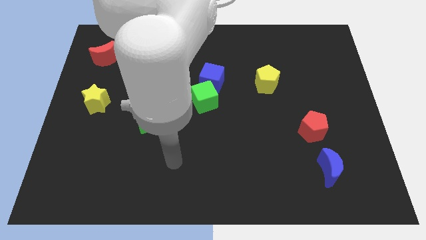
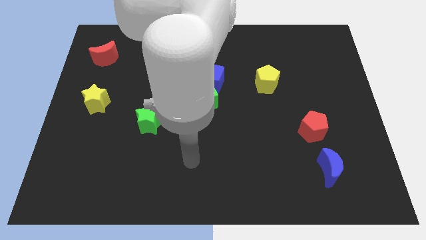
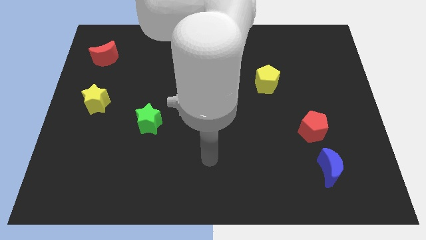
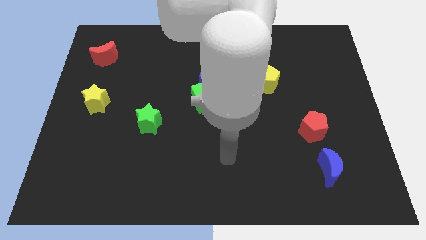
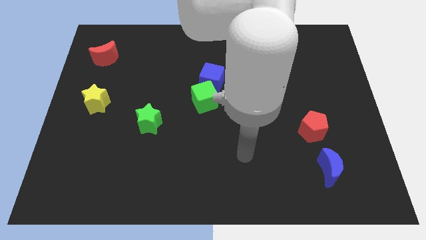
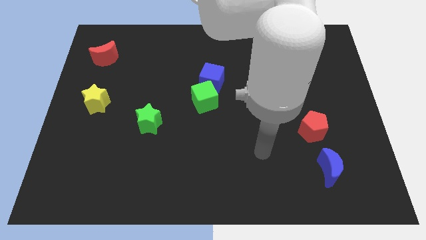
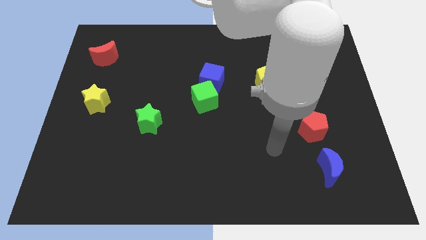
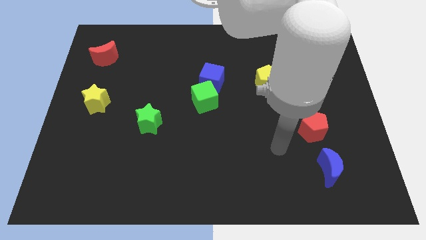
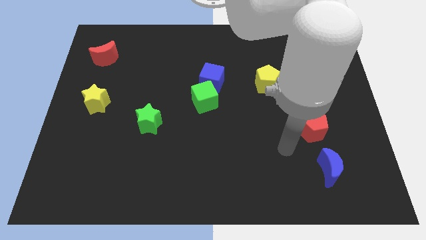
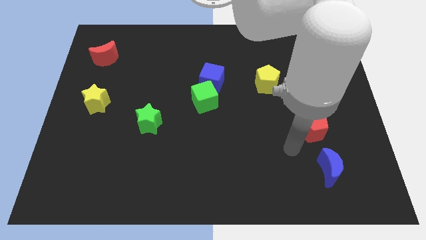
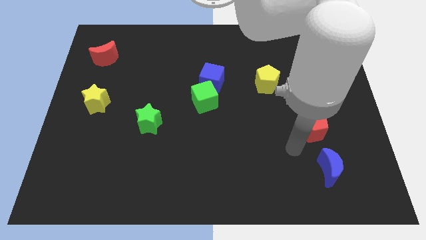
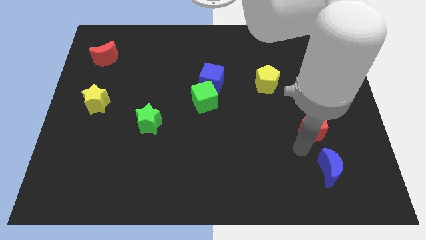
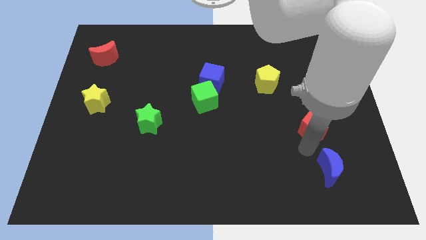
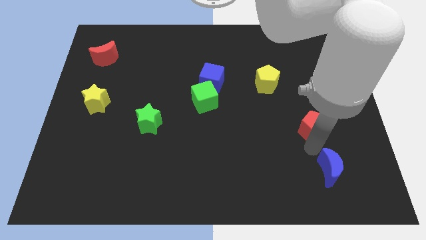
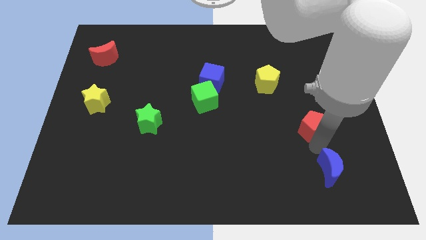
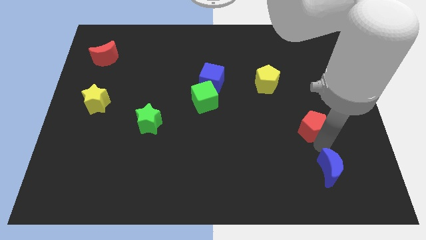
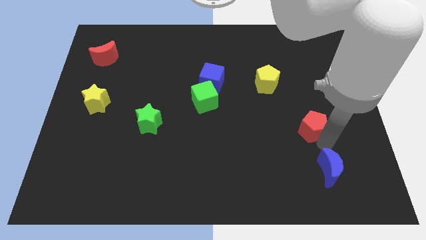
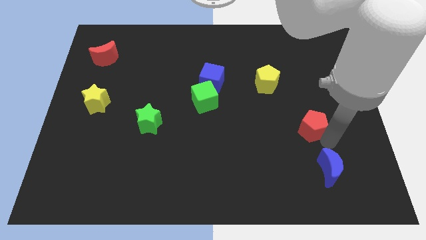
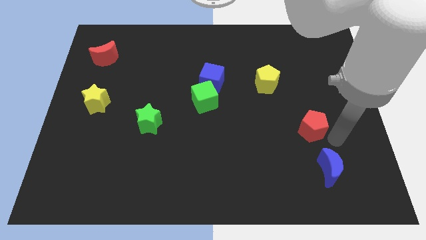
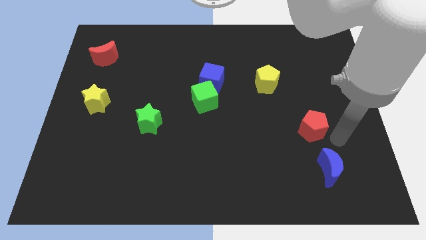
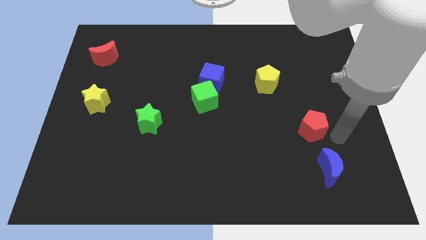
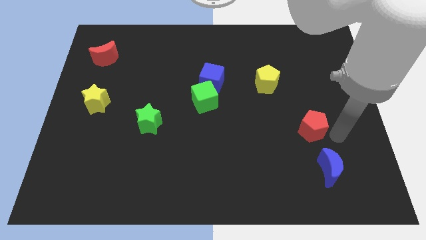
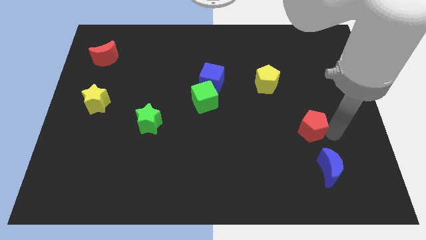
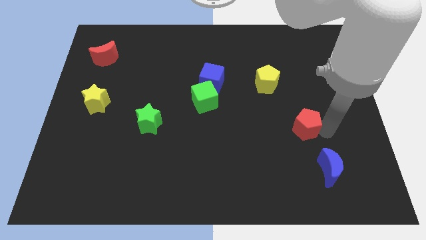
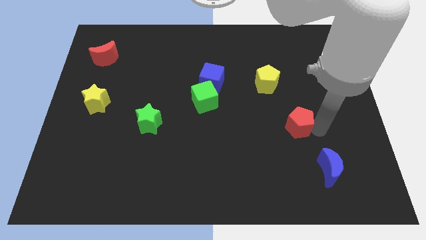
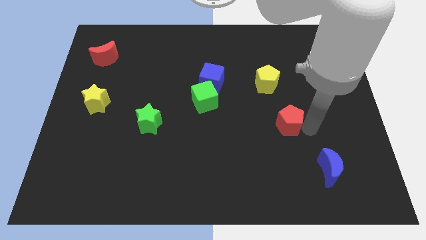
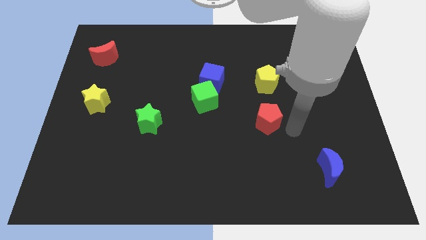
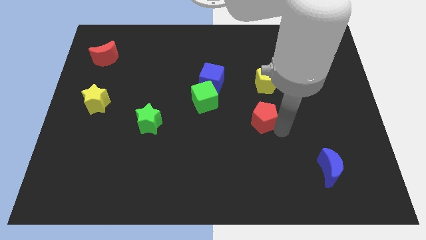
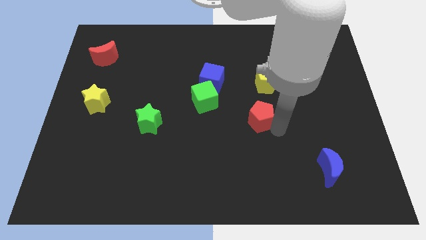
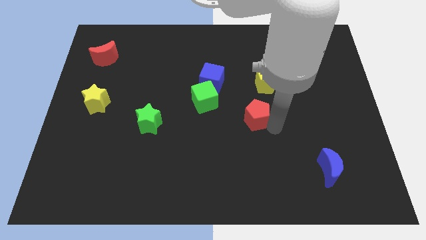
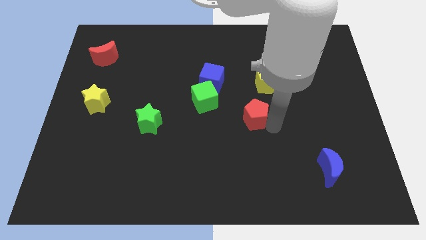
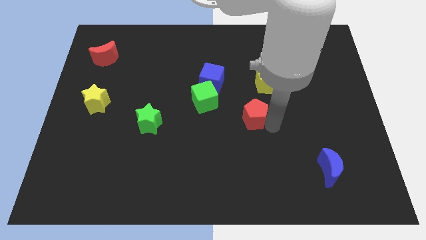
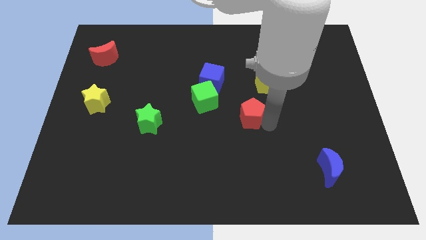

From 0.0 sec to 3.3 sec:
place the red pentagon right to the green cube

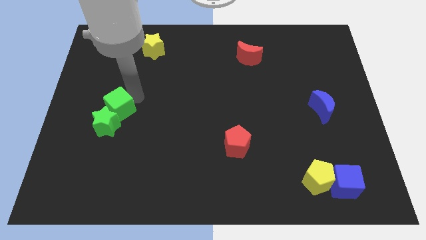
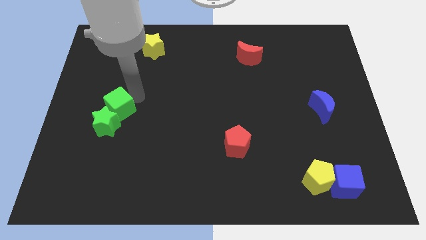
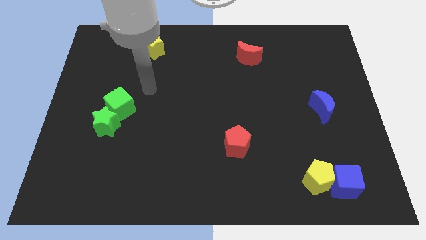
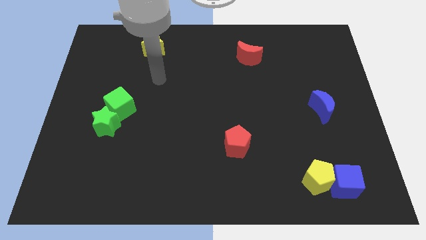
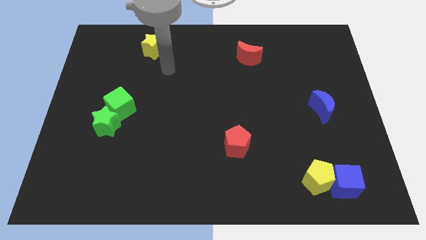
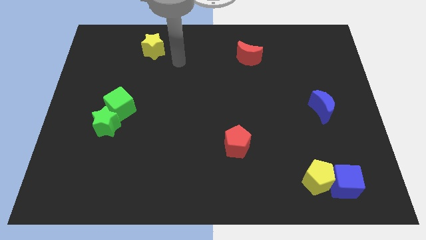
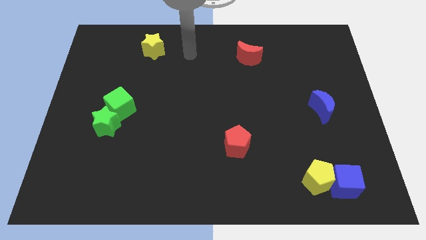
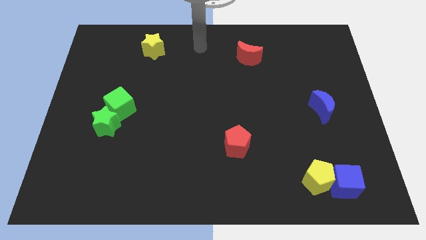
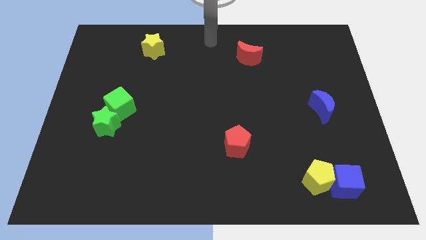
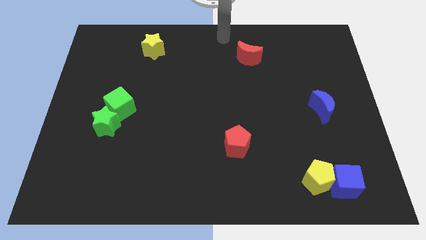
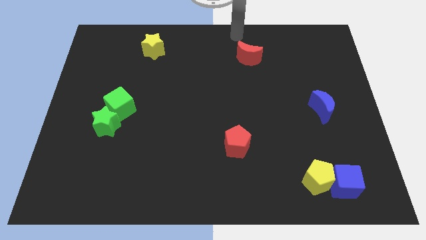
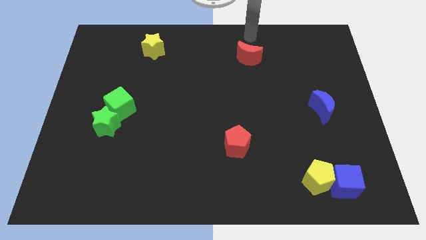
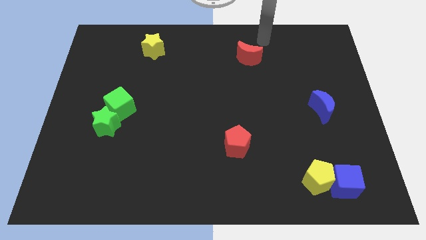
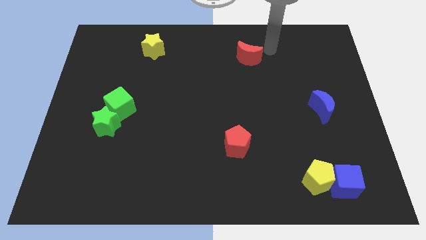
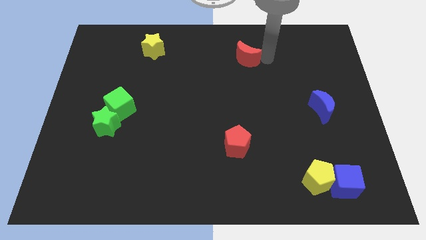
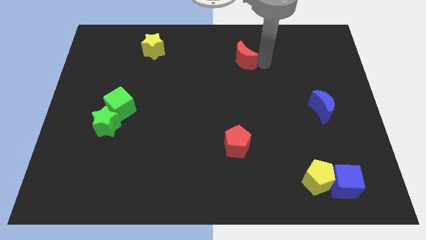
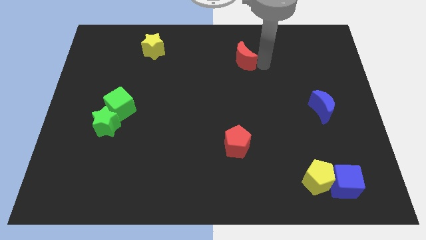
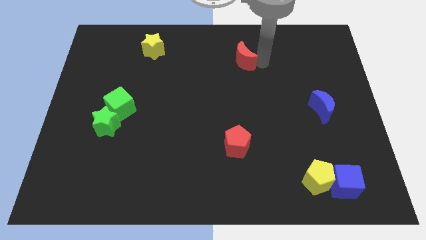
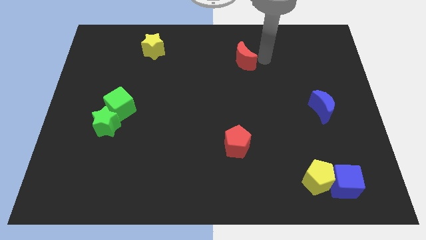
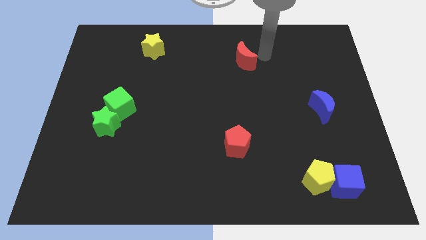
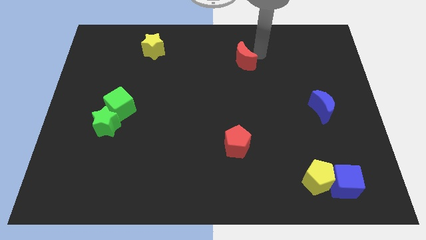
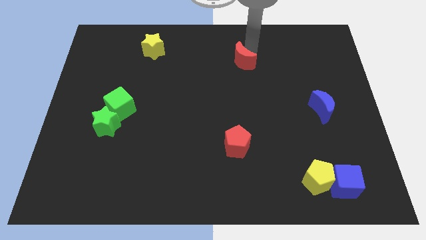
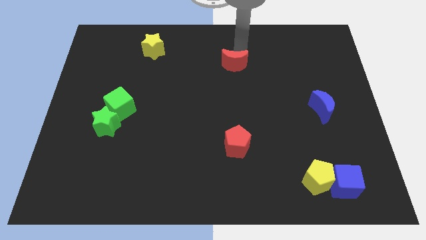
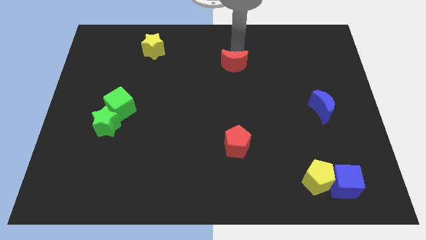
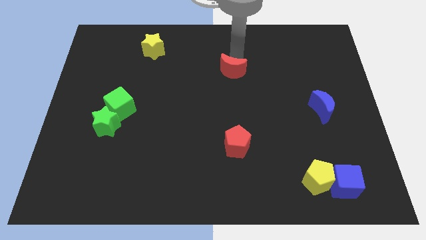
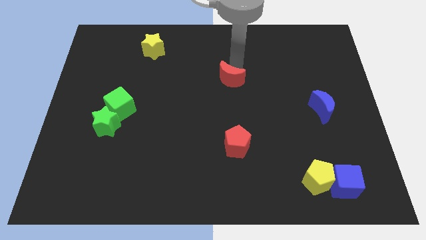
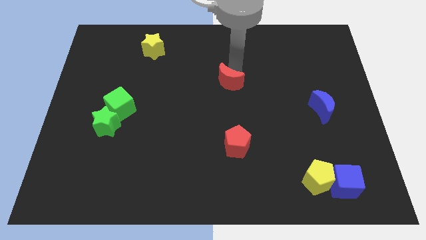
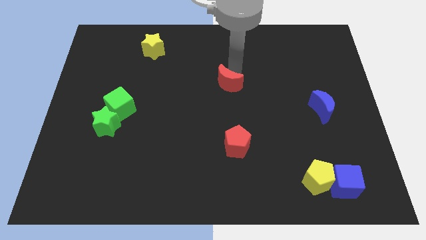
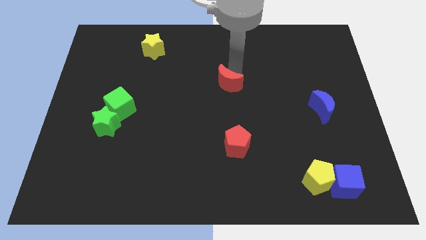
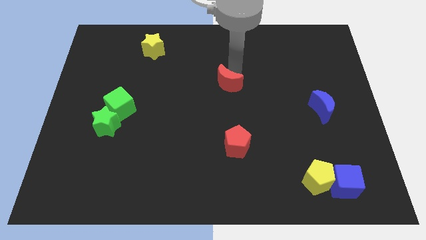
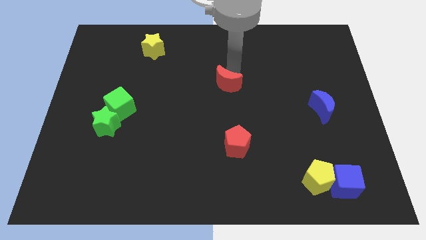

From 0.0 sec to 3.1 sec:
place the red crescent vertically above red pentagon

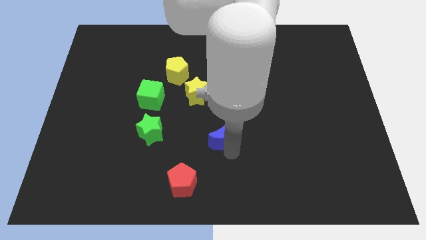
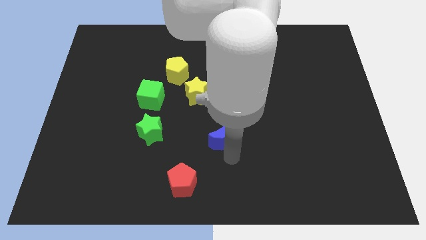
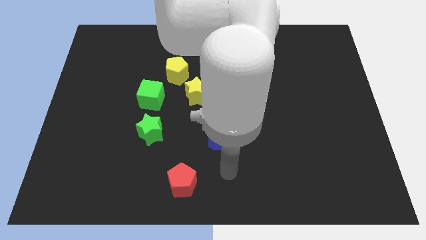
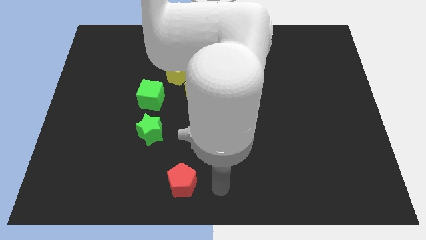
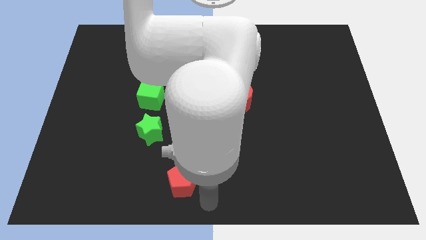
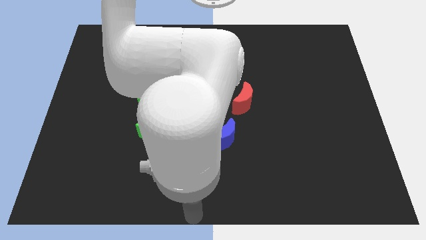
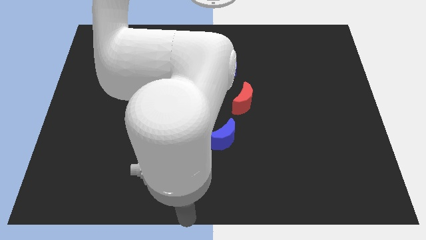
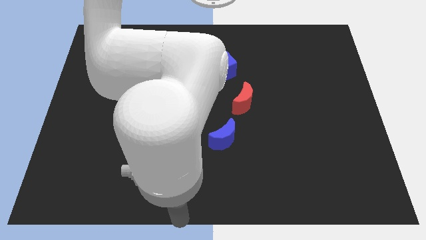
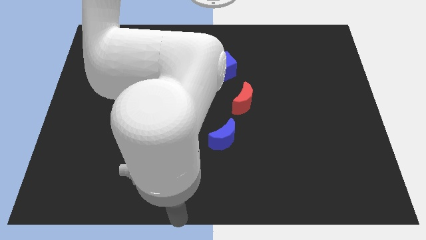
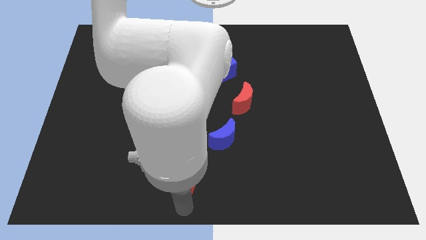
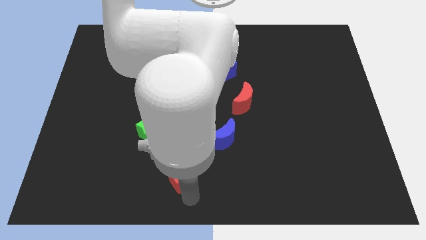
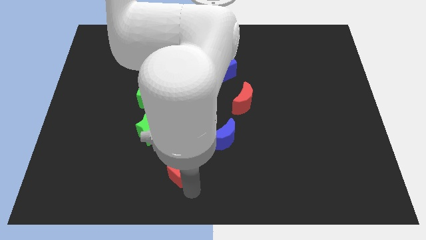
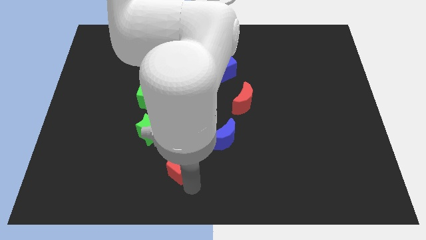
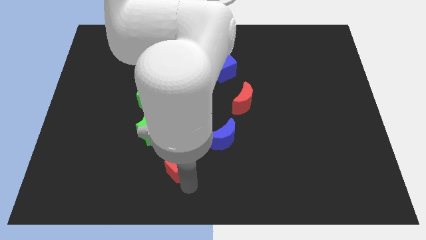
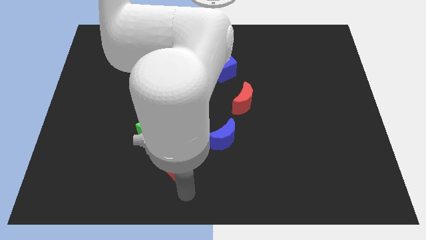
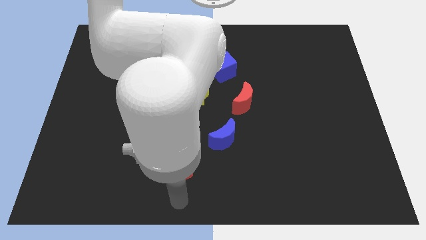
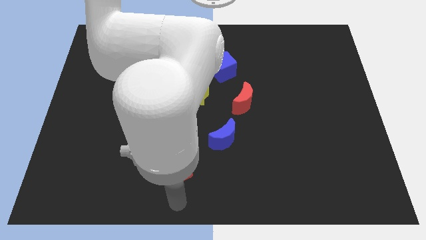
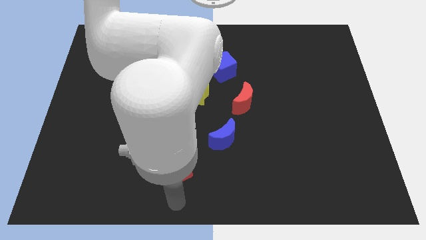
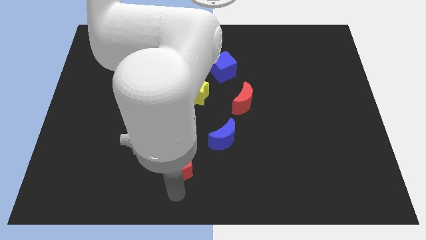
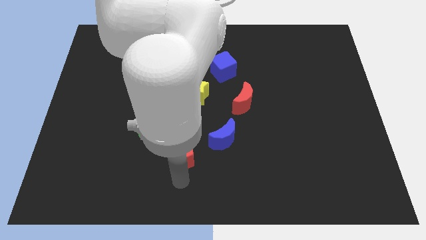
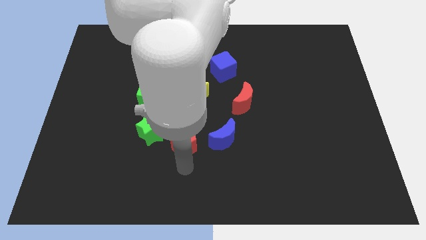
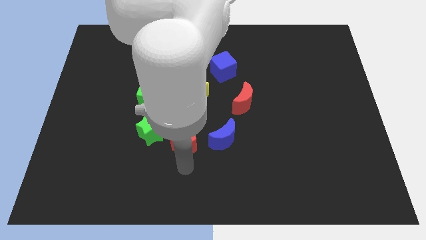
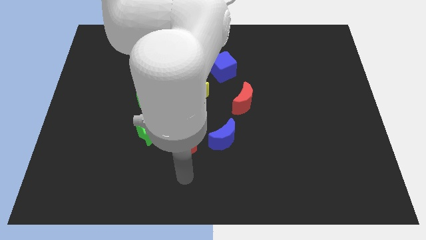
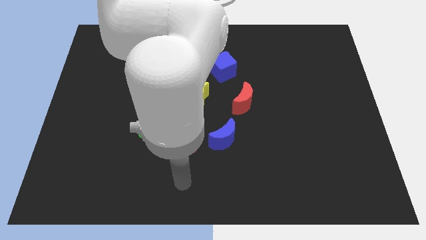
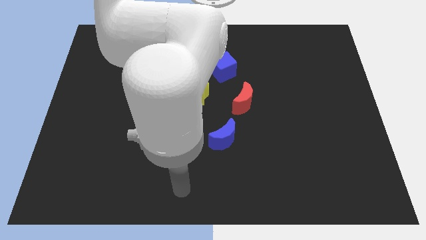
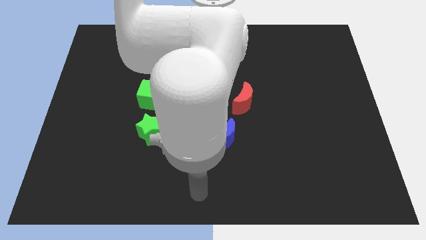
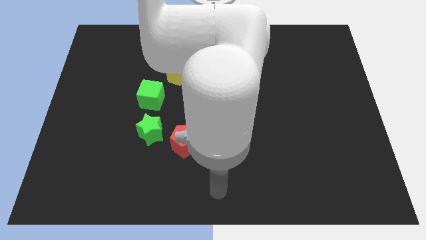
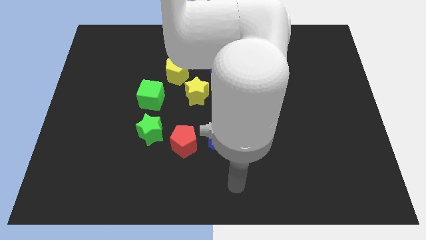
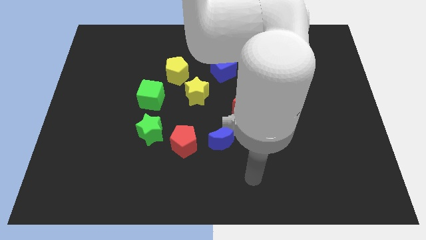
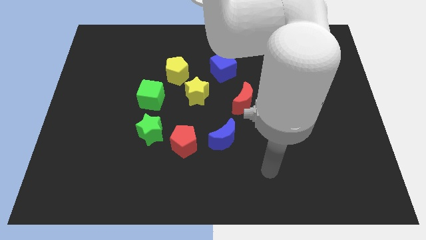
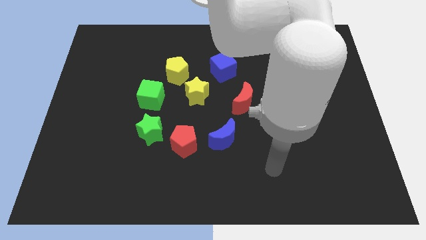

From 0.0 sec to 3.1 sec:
place red pentagon between blue moon and green star to form a circle
